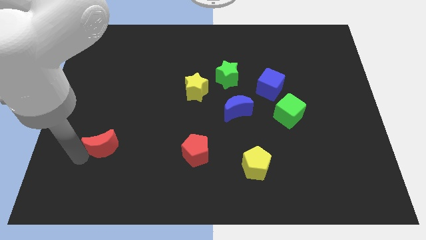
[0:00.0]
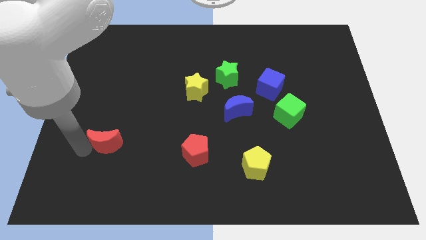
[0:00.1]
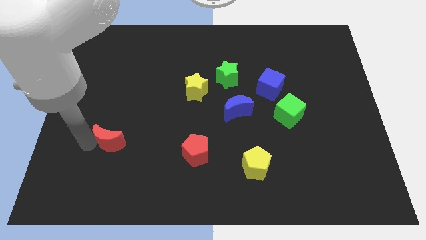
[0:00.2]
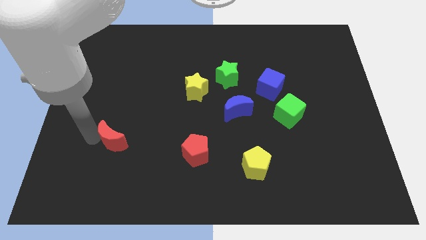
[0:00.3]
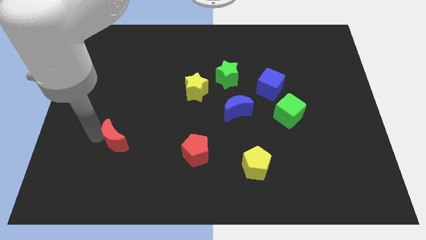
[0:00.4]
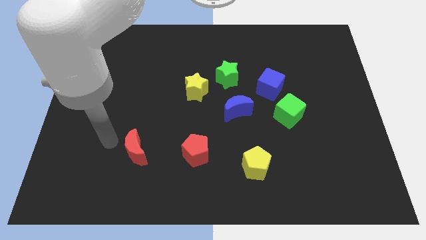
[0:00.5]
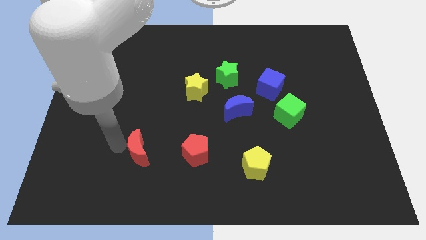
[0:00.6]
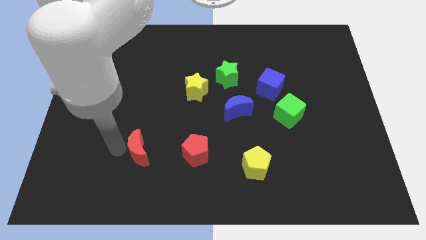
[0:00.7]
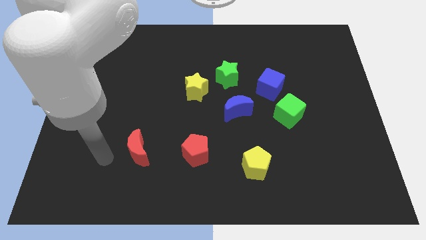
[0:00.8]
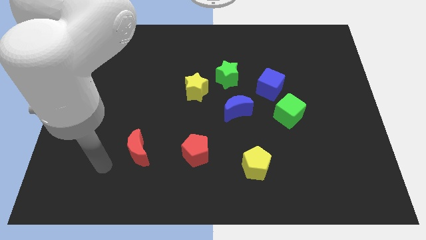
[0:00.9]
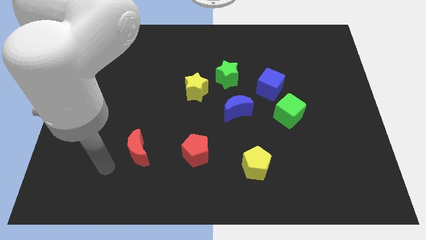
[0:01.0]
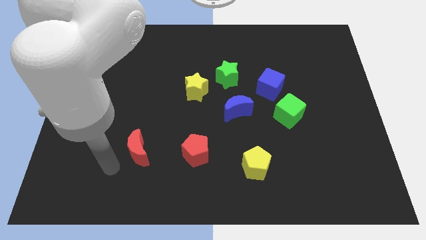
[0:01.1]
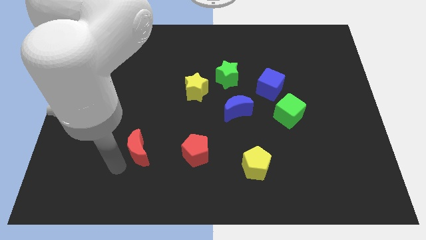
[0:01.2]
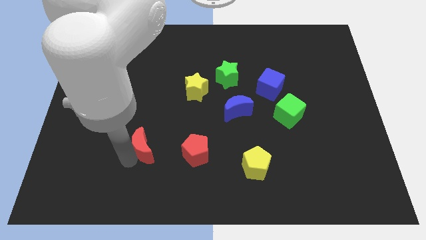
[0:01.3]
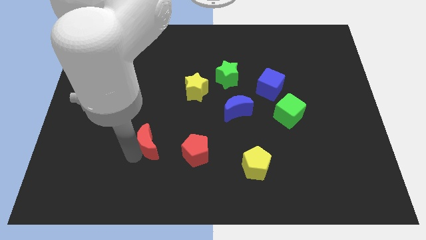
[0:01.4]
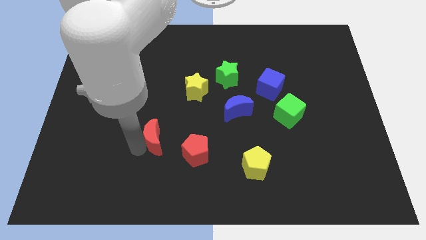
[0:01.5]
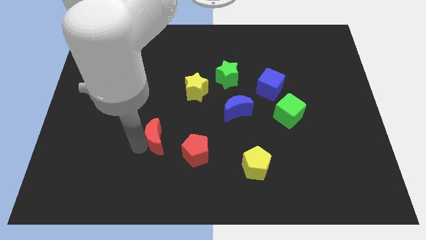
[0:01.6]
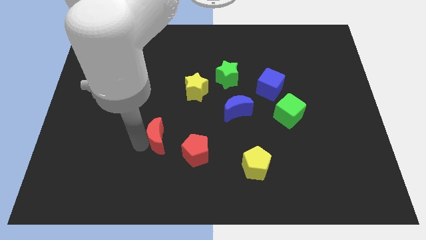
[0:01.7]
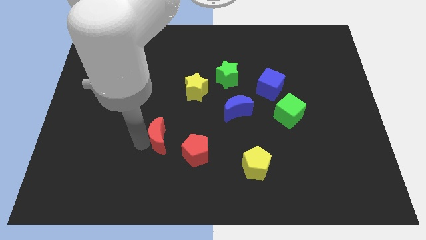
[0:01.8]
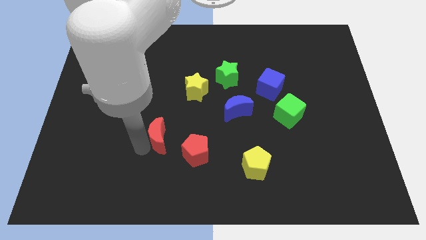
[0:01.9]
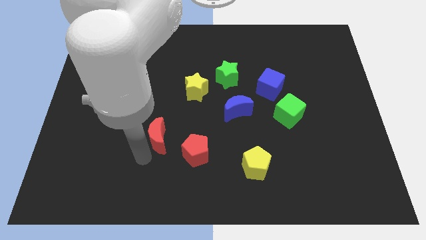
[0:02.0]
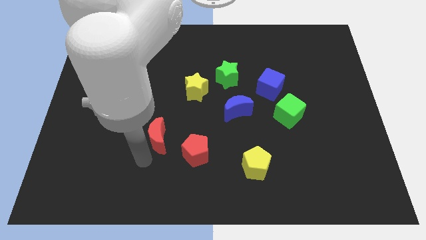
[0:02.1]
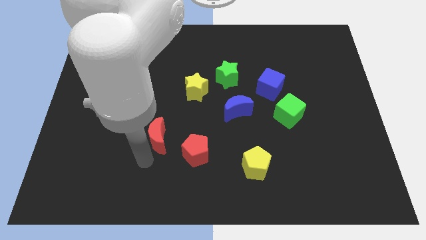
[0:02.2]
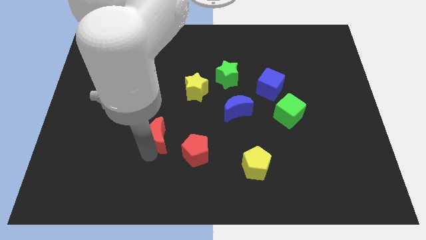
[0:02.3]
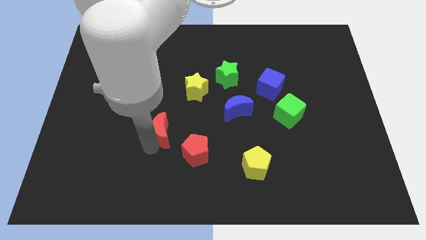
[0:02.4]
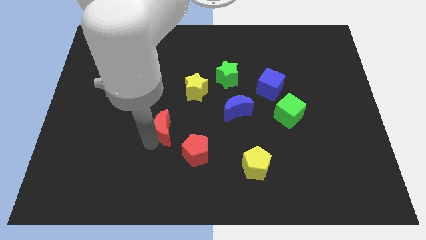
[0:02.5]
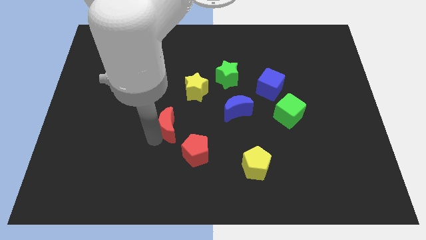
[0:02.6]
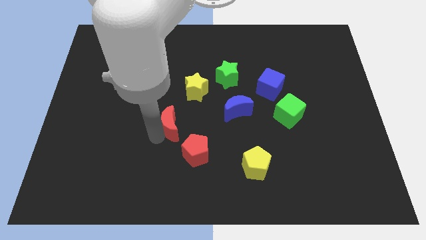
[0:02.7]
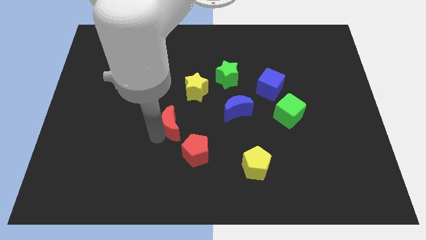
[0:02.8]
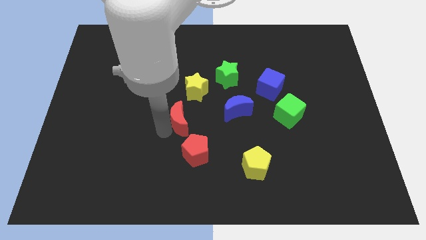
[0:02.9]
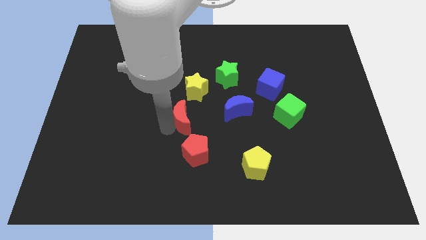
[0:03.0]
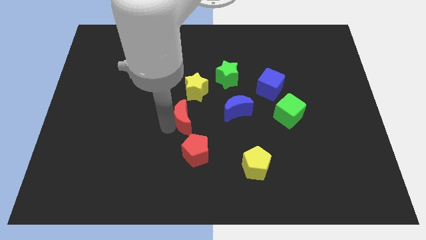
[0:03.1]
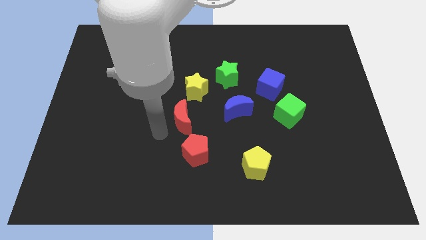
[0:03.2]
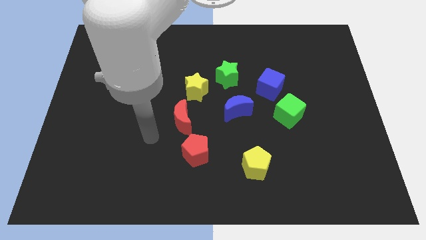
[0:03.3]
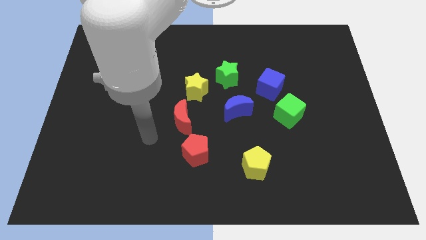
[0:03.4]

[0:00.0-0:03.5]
move the red moon to the left of the blue moon

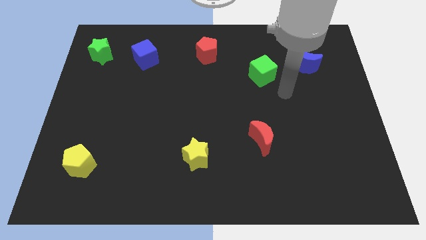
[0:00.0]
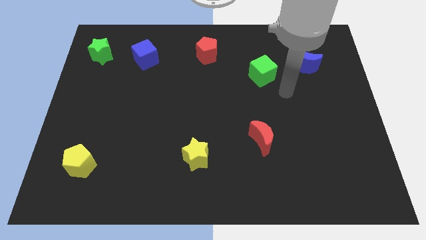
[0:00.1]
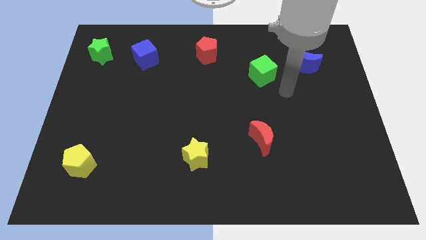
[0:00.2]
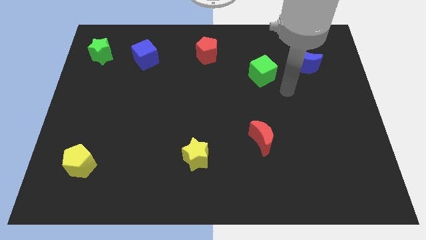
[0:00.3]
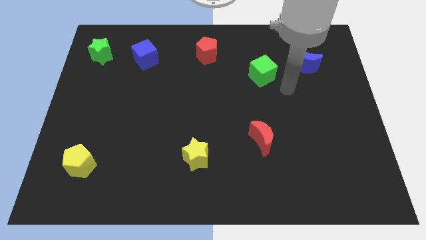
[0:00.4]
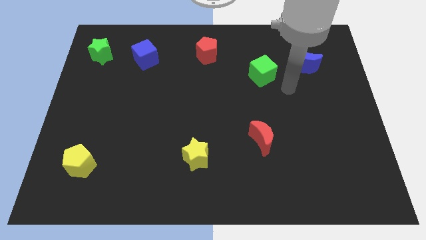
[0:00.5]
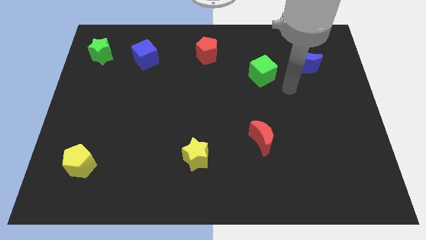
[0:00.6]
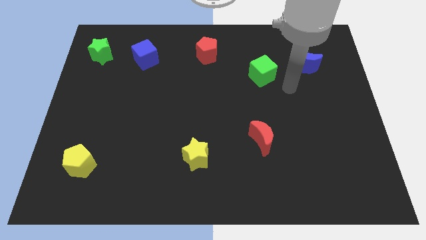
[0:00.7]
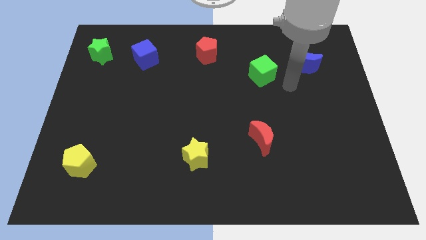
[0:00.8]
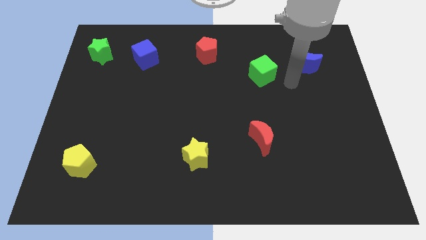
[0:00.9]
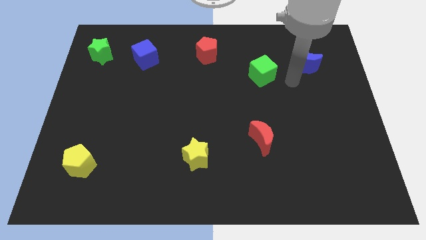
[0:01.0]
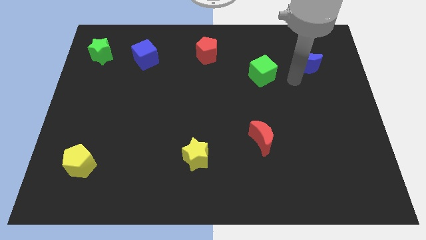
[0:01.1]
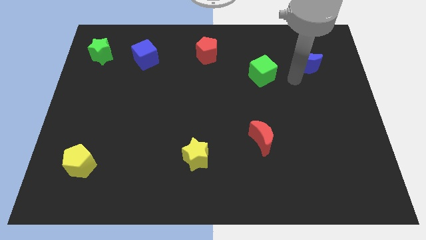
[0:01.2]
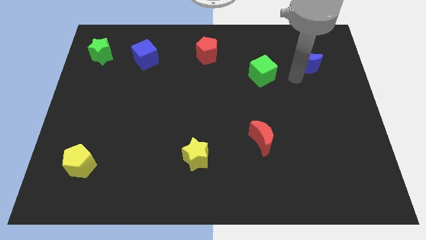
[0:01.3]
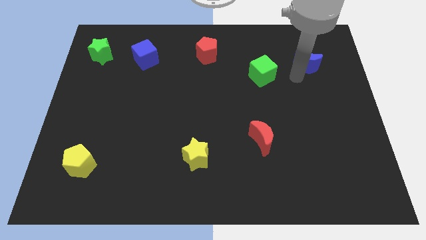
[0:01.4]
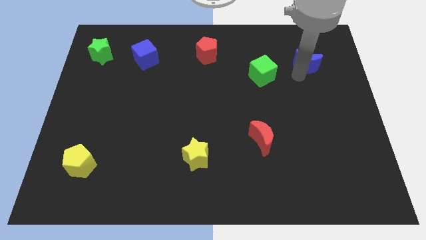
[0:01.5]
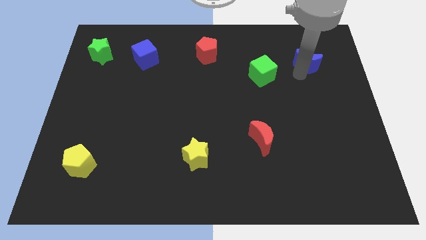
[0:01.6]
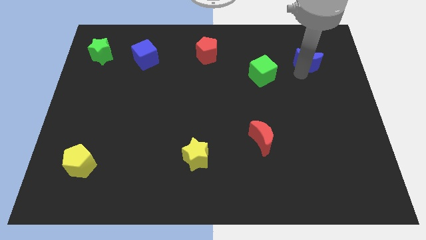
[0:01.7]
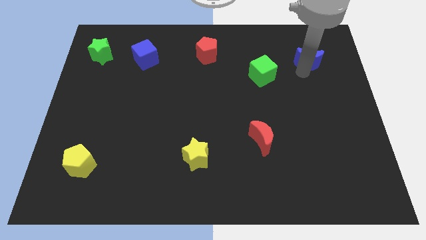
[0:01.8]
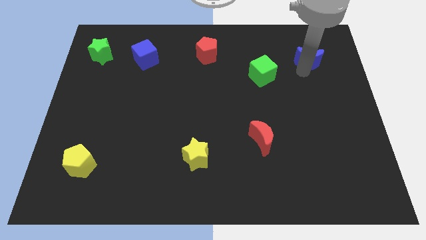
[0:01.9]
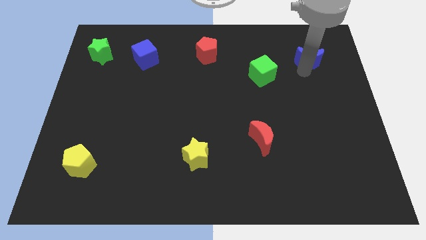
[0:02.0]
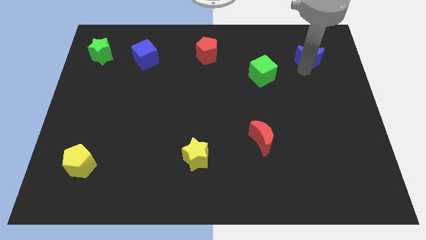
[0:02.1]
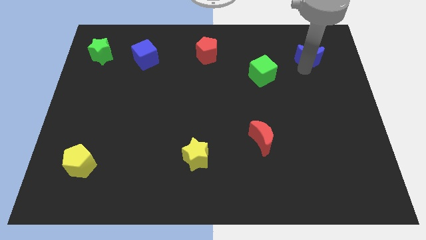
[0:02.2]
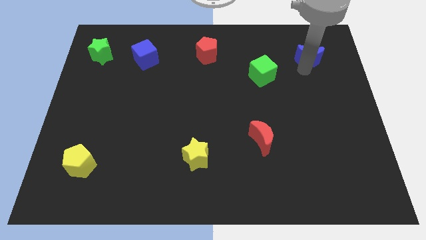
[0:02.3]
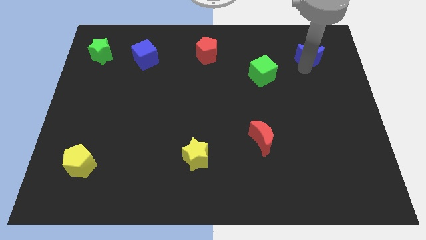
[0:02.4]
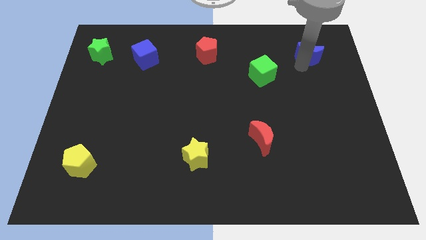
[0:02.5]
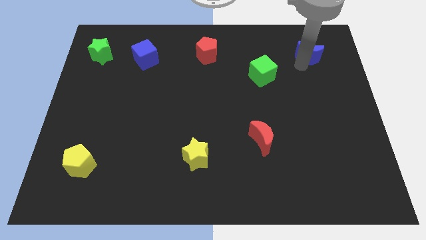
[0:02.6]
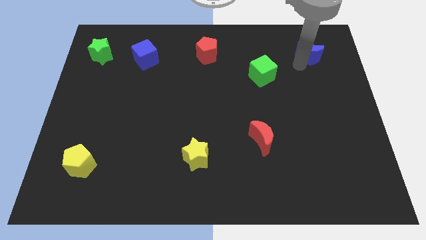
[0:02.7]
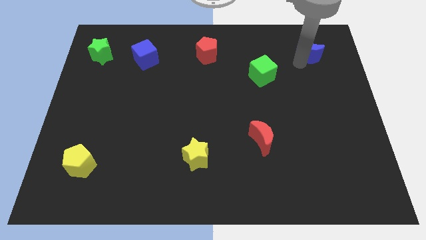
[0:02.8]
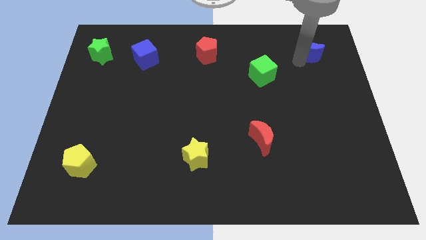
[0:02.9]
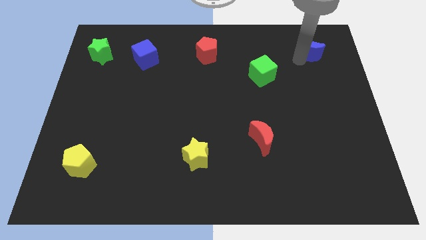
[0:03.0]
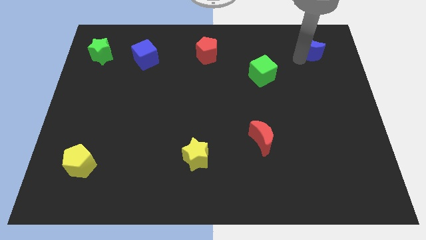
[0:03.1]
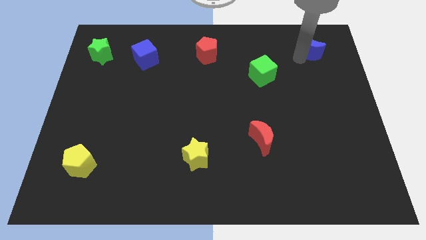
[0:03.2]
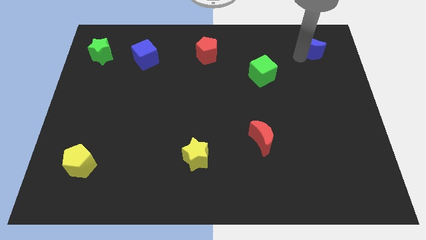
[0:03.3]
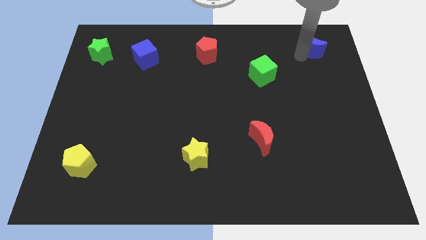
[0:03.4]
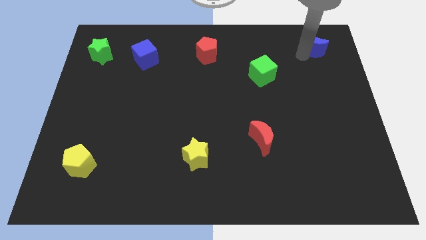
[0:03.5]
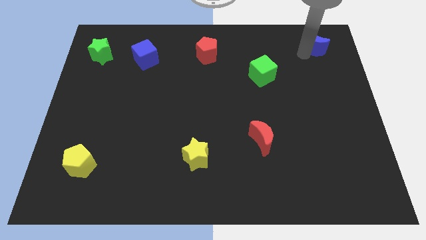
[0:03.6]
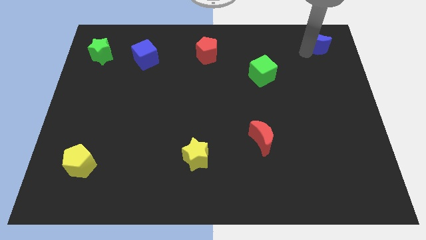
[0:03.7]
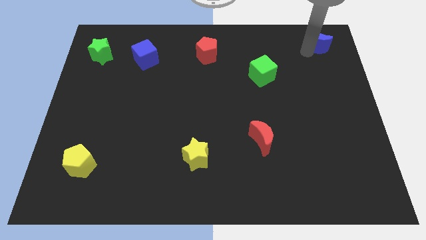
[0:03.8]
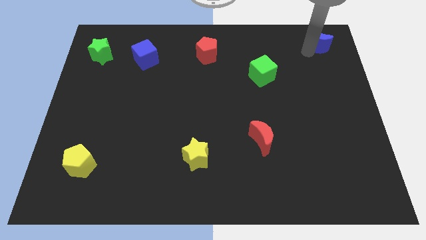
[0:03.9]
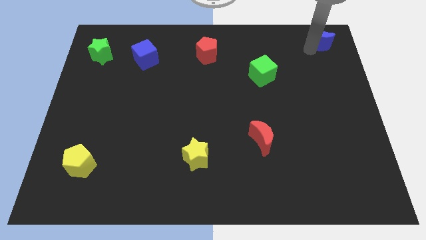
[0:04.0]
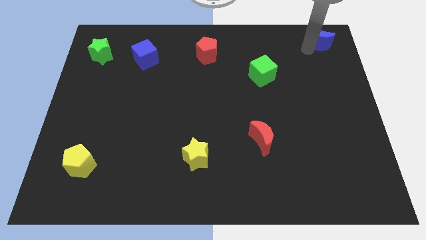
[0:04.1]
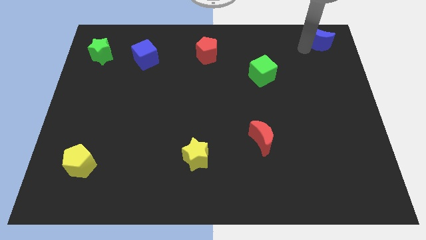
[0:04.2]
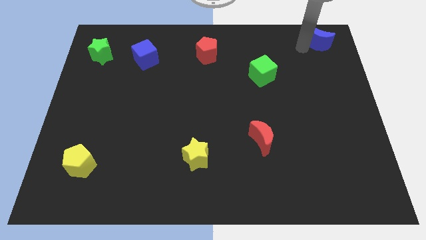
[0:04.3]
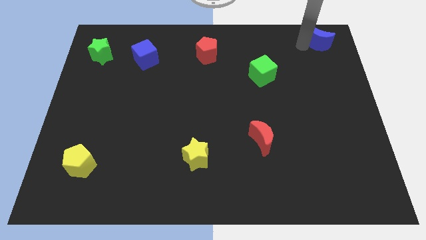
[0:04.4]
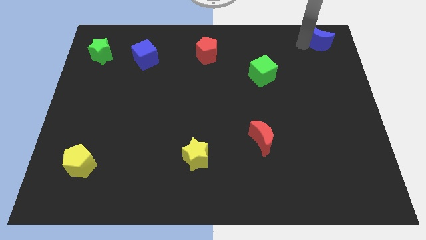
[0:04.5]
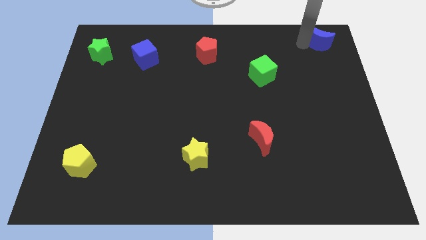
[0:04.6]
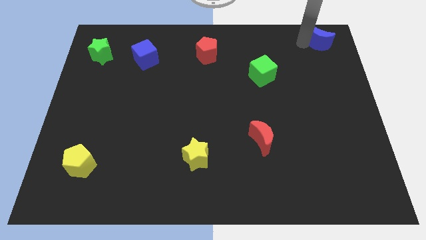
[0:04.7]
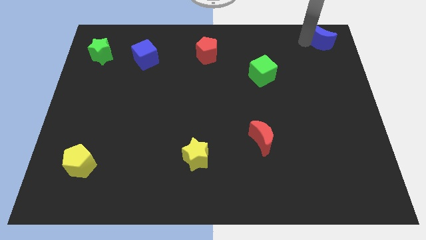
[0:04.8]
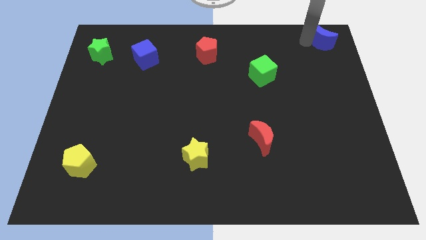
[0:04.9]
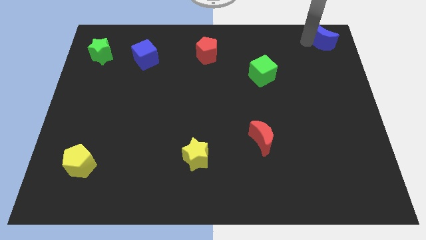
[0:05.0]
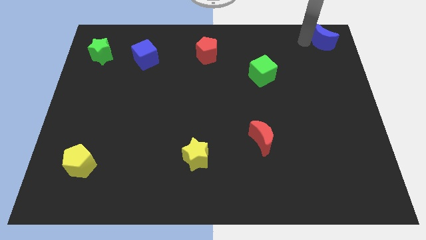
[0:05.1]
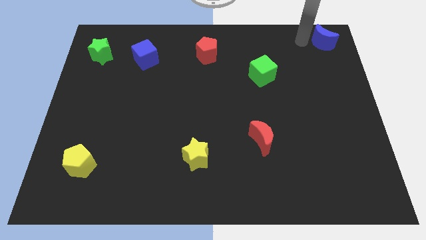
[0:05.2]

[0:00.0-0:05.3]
push the blue moon to the top right corner

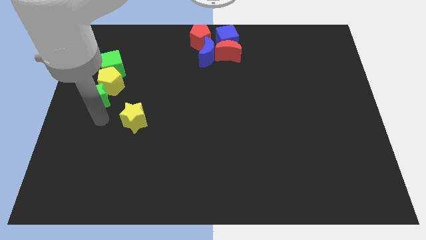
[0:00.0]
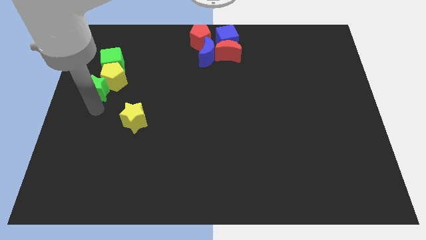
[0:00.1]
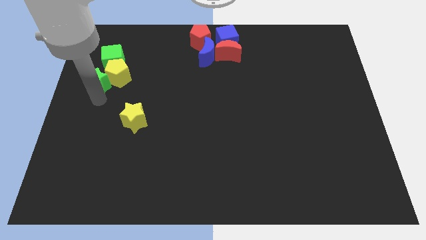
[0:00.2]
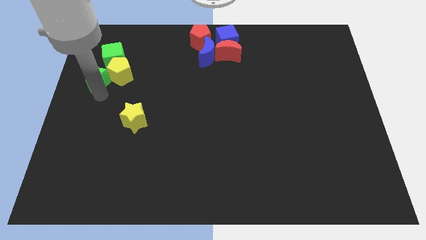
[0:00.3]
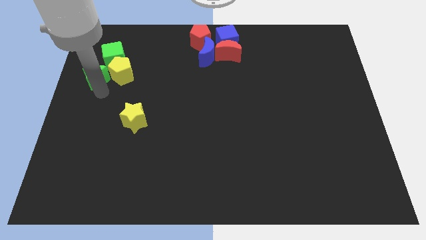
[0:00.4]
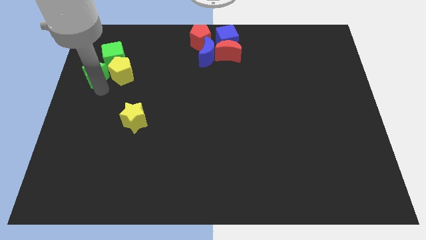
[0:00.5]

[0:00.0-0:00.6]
place the green star left to the yellow pentagon
